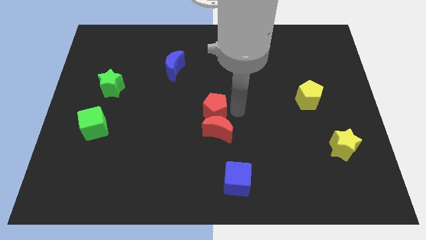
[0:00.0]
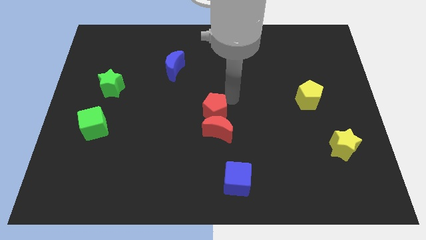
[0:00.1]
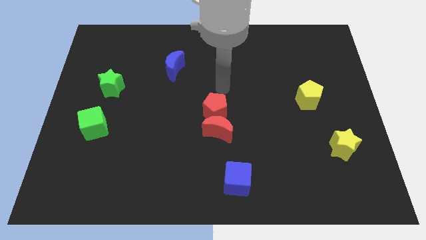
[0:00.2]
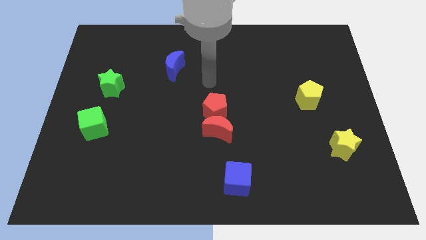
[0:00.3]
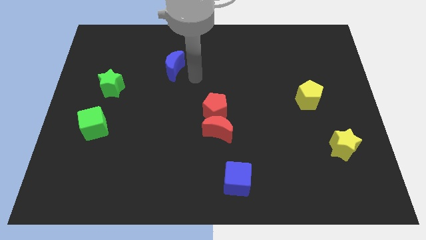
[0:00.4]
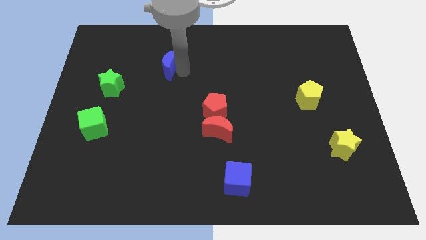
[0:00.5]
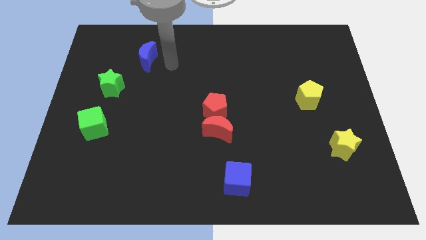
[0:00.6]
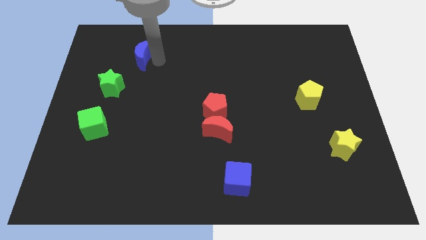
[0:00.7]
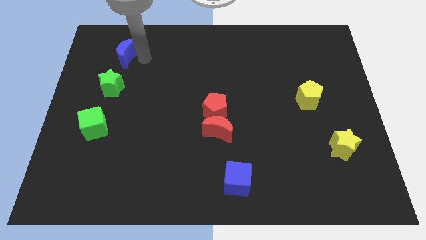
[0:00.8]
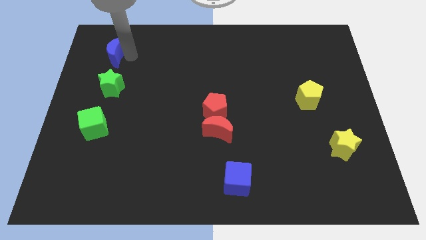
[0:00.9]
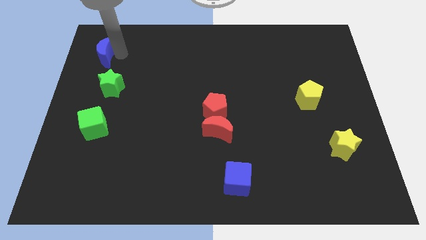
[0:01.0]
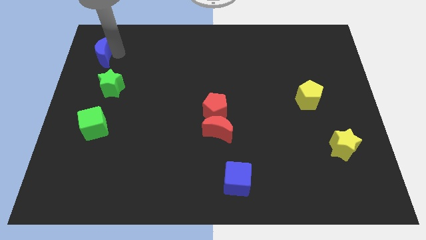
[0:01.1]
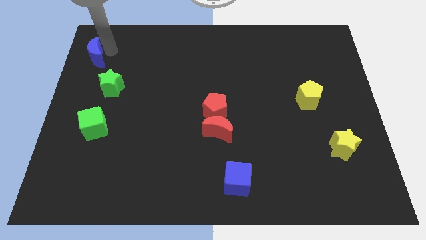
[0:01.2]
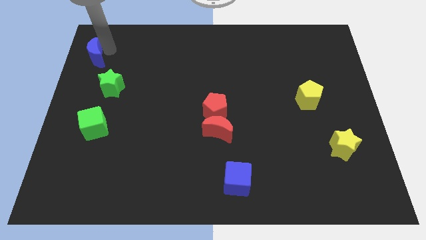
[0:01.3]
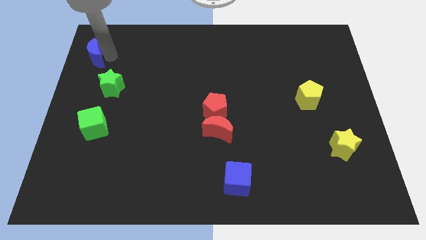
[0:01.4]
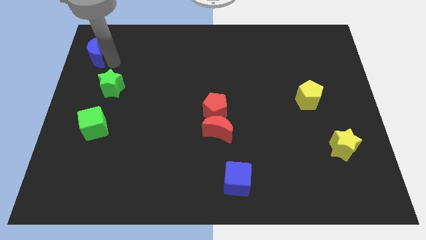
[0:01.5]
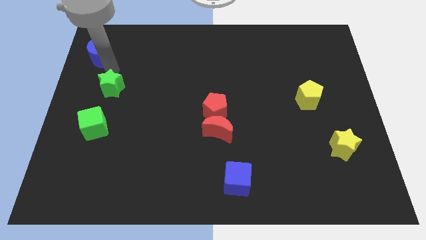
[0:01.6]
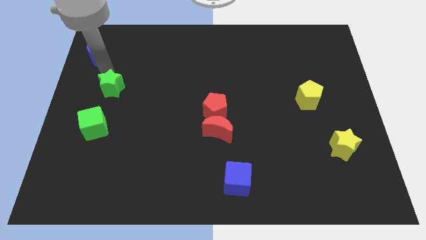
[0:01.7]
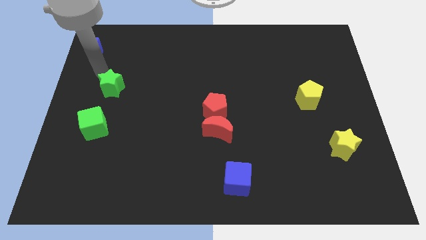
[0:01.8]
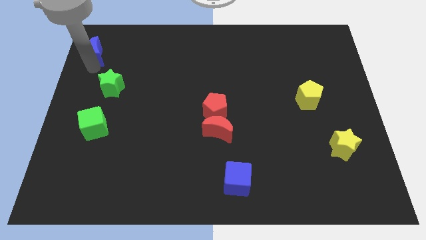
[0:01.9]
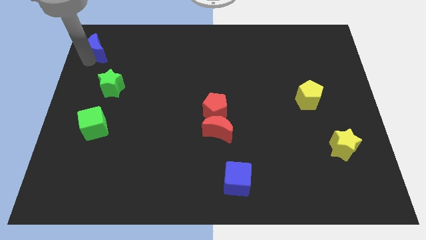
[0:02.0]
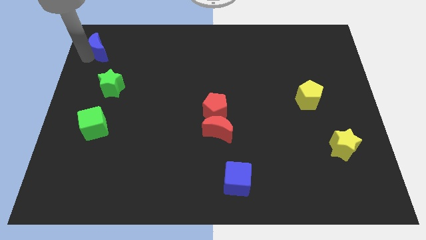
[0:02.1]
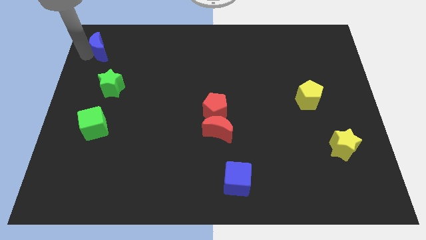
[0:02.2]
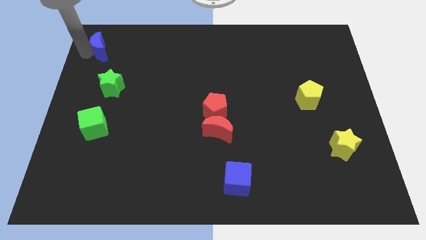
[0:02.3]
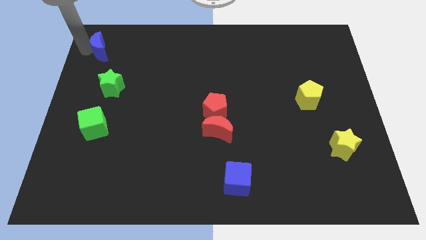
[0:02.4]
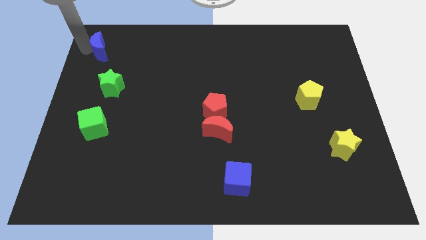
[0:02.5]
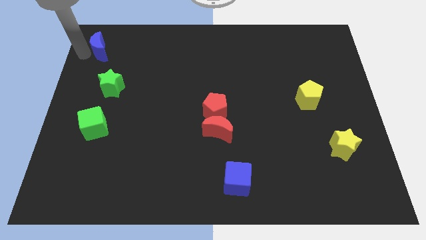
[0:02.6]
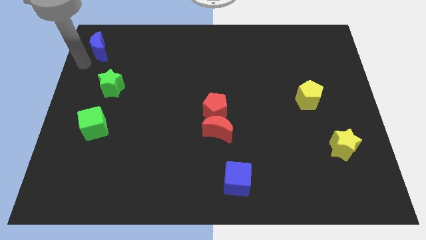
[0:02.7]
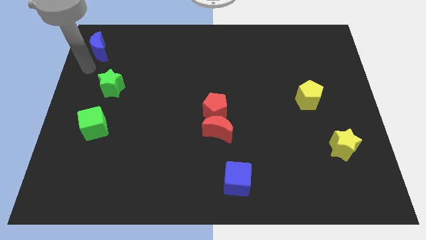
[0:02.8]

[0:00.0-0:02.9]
place the blue moon above the green star

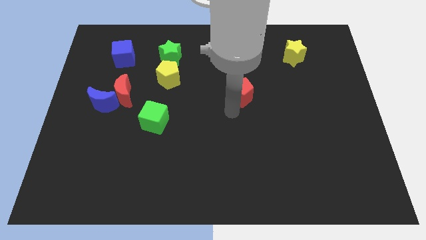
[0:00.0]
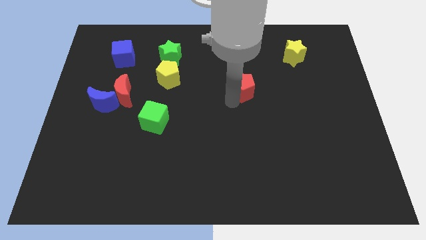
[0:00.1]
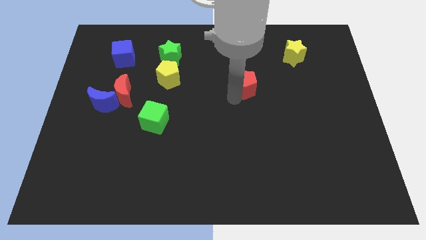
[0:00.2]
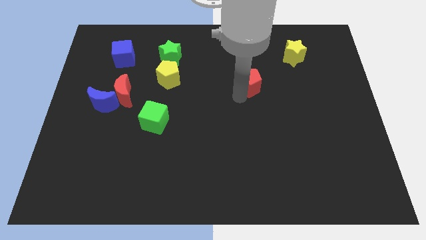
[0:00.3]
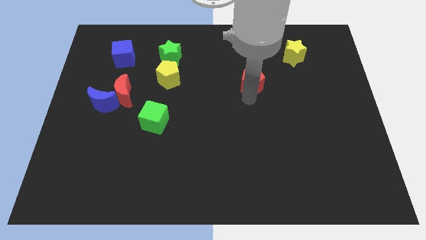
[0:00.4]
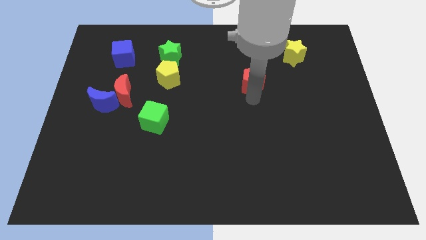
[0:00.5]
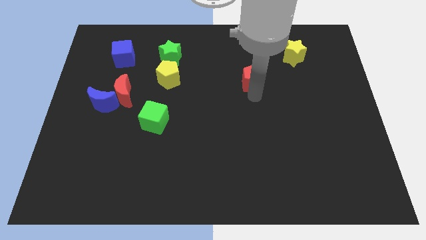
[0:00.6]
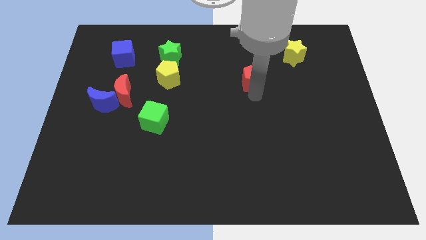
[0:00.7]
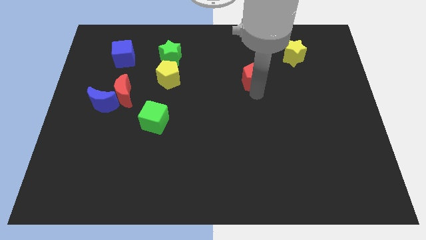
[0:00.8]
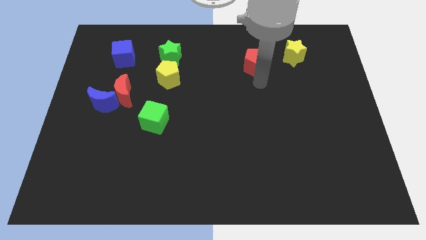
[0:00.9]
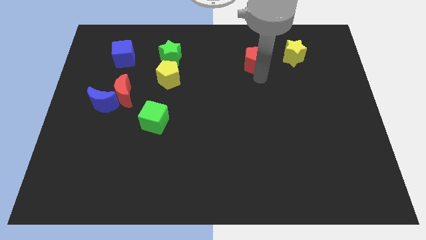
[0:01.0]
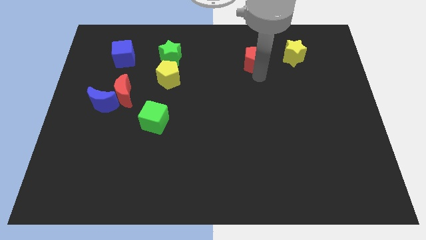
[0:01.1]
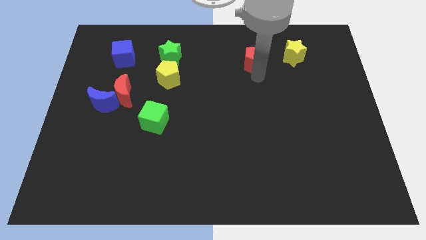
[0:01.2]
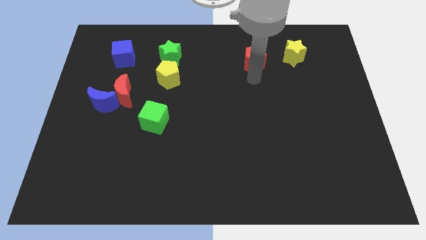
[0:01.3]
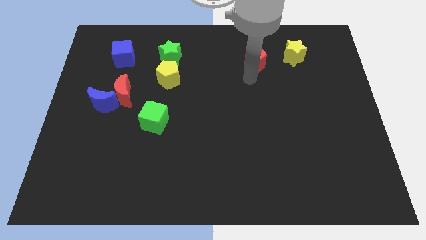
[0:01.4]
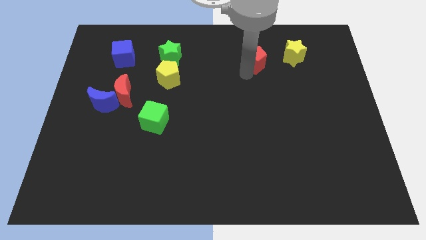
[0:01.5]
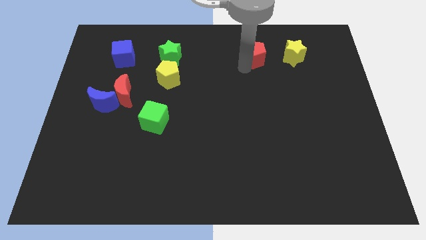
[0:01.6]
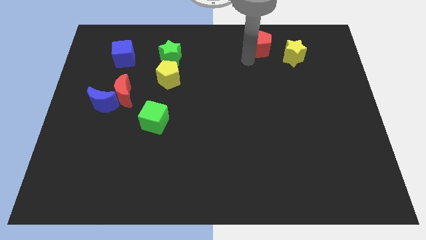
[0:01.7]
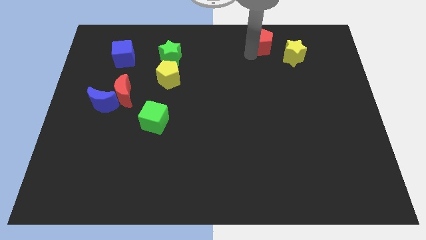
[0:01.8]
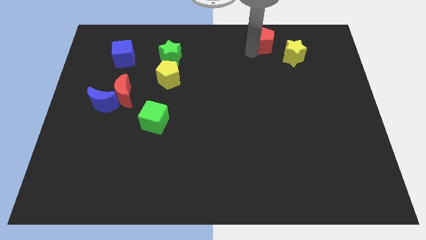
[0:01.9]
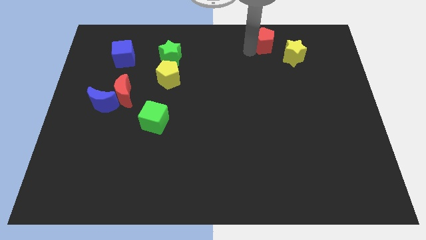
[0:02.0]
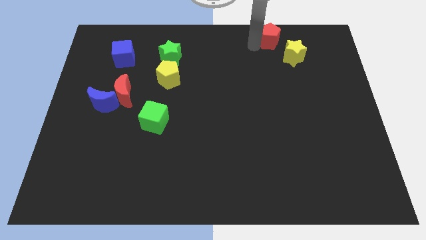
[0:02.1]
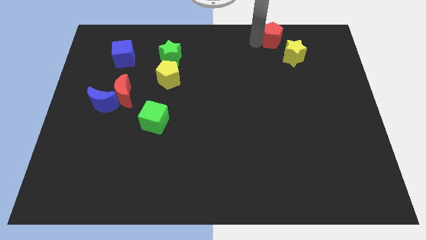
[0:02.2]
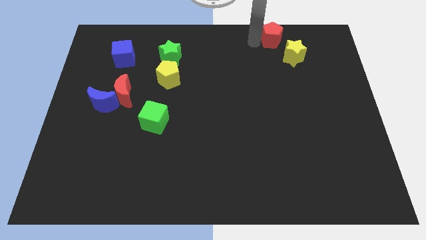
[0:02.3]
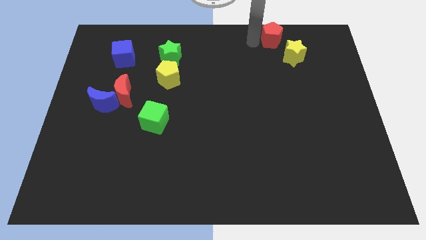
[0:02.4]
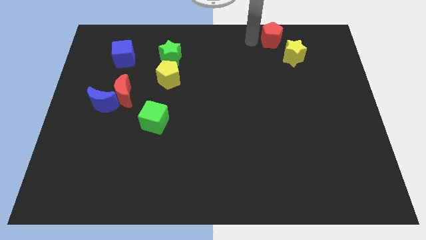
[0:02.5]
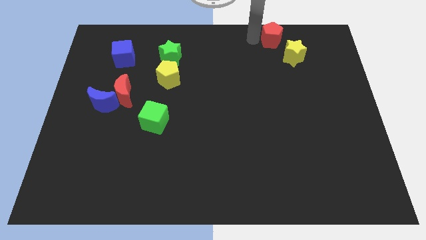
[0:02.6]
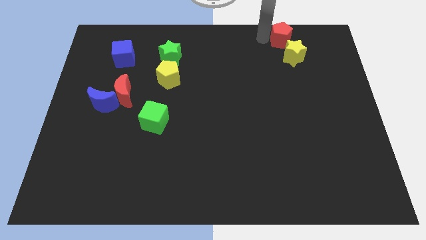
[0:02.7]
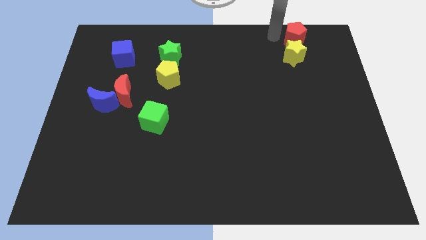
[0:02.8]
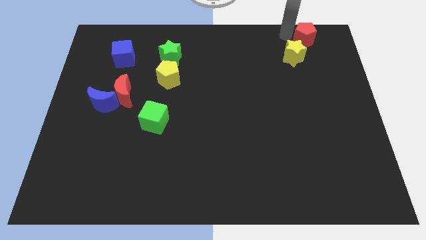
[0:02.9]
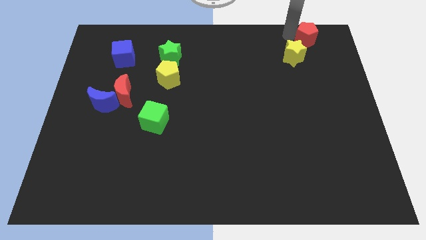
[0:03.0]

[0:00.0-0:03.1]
push the red pentagon to the top right side of the board

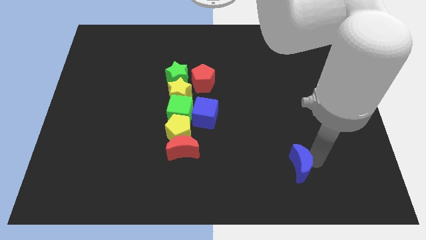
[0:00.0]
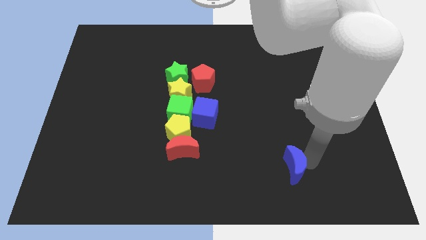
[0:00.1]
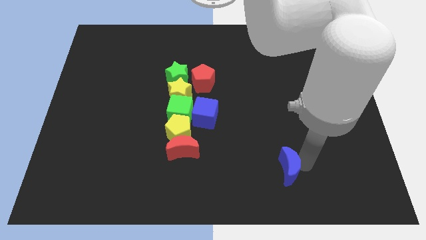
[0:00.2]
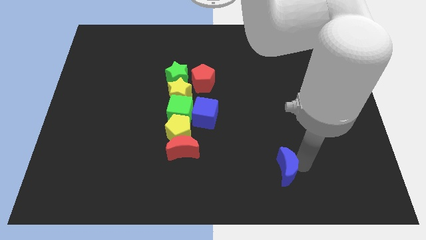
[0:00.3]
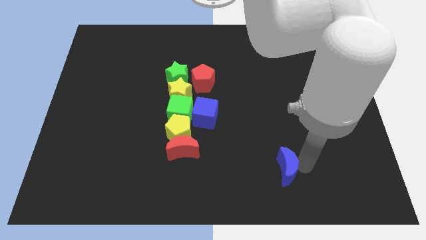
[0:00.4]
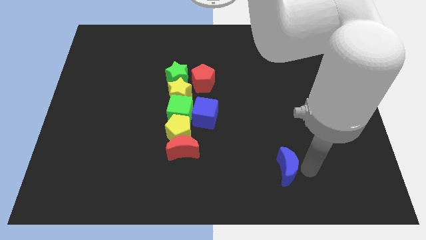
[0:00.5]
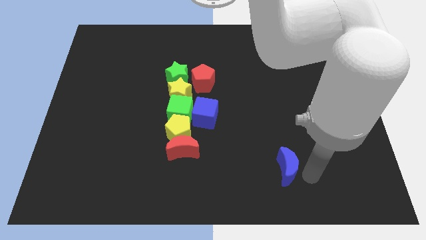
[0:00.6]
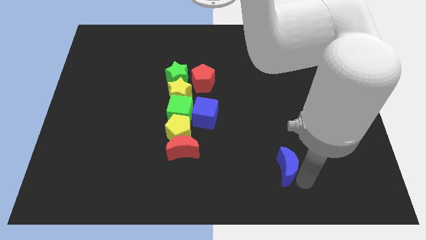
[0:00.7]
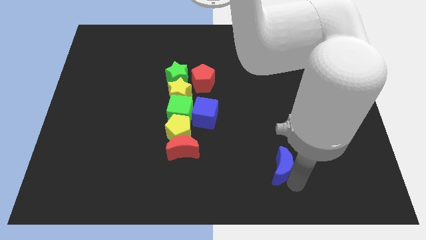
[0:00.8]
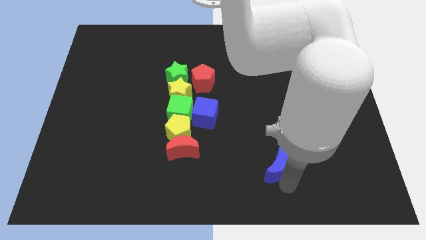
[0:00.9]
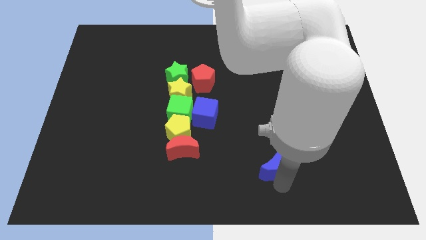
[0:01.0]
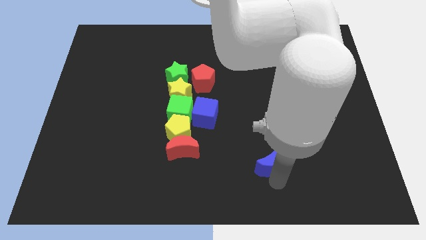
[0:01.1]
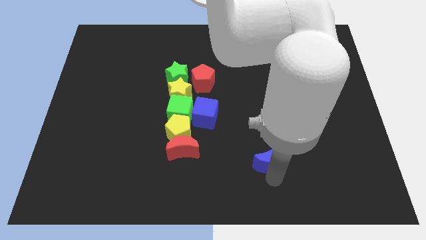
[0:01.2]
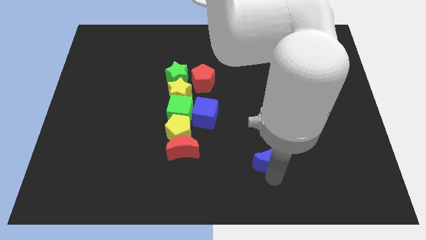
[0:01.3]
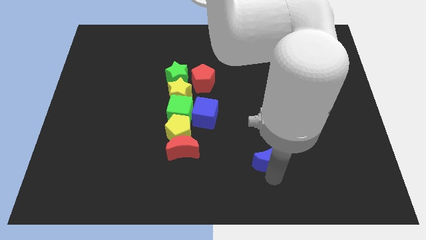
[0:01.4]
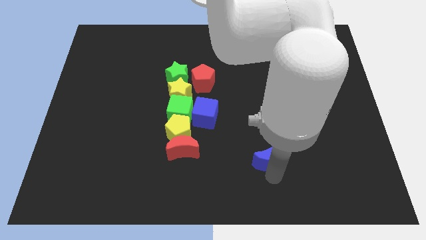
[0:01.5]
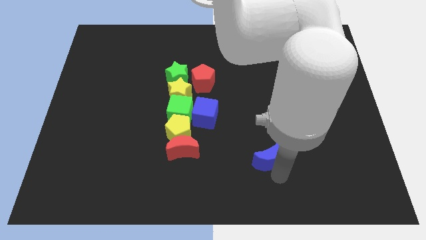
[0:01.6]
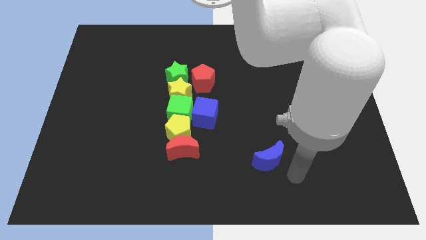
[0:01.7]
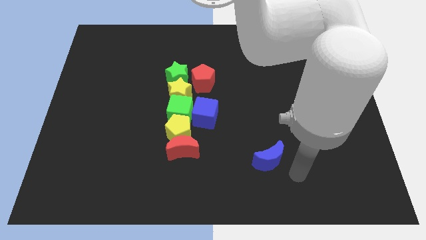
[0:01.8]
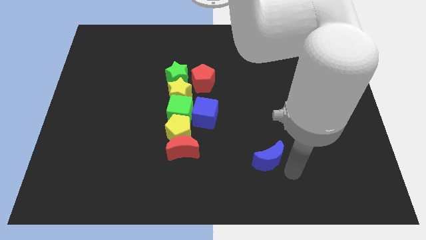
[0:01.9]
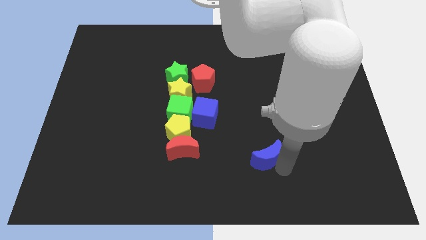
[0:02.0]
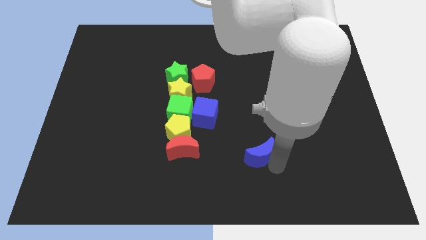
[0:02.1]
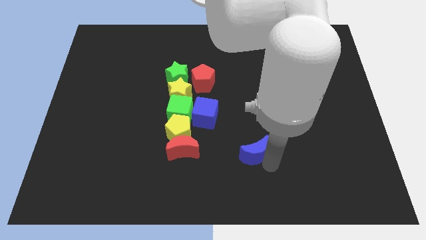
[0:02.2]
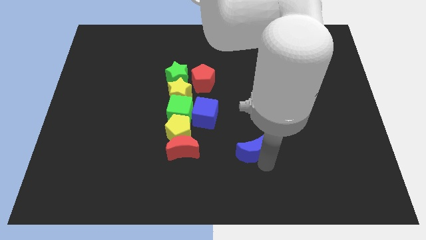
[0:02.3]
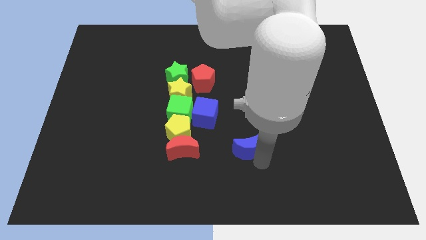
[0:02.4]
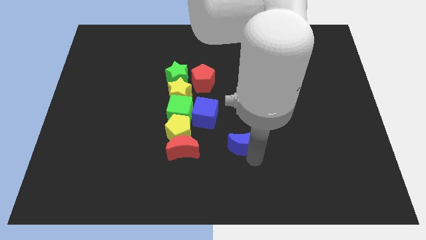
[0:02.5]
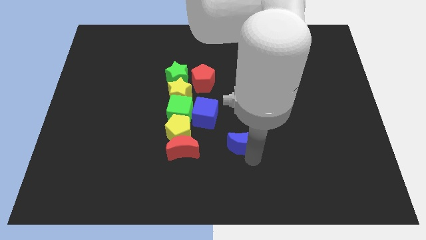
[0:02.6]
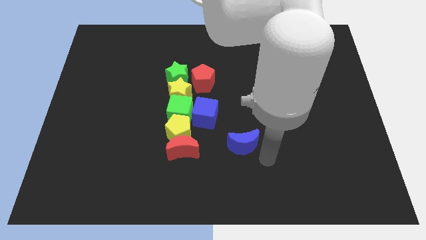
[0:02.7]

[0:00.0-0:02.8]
drag the blue moon towards group of blocks
